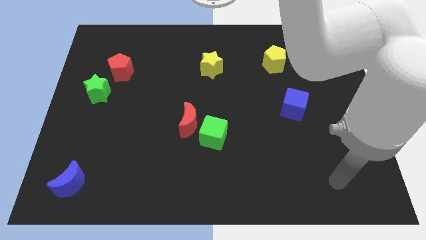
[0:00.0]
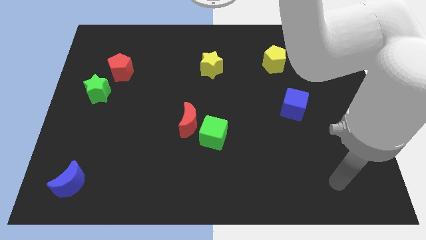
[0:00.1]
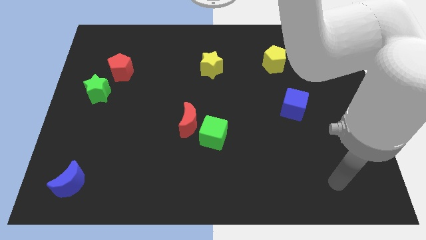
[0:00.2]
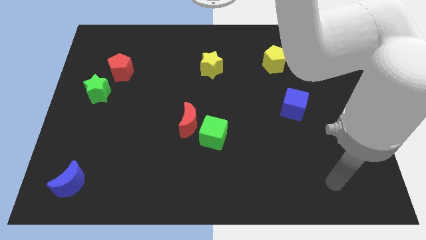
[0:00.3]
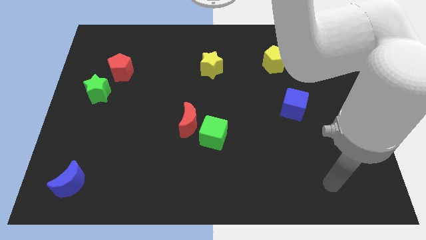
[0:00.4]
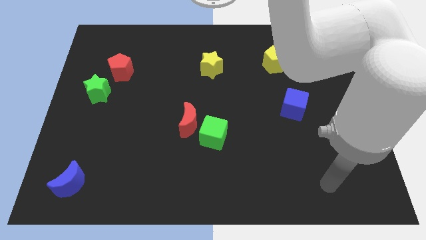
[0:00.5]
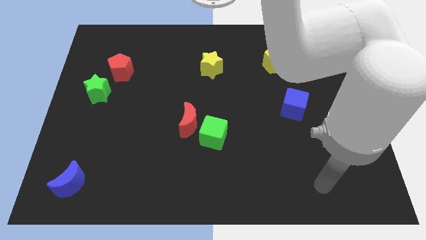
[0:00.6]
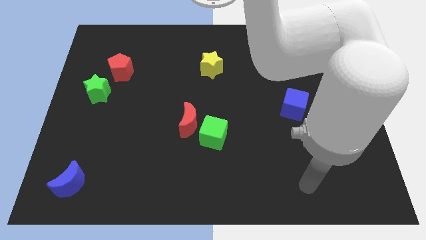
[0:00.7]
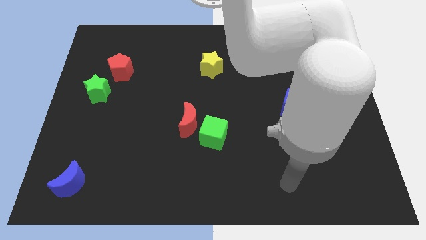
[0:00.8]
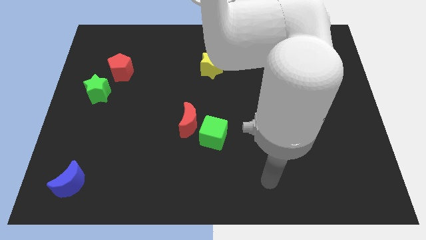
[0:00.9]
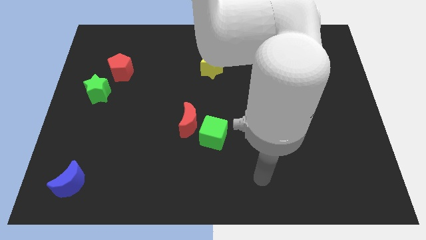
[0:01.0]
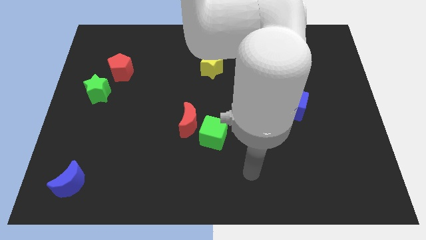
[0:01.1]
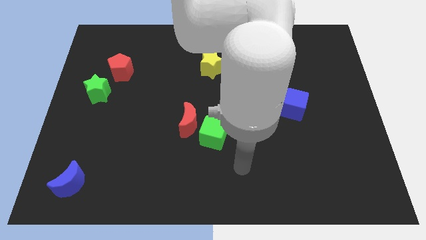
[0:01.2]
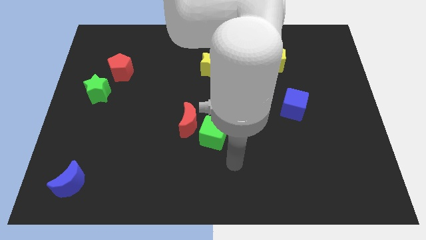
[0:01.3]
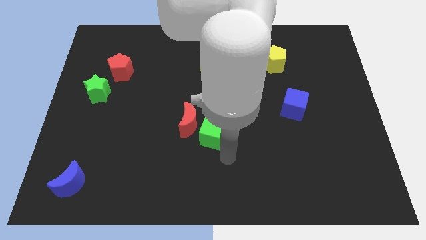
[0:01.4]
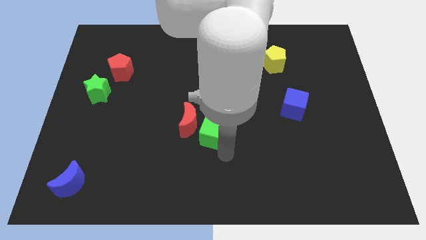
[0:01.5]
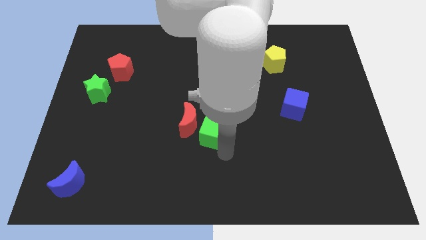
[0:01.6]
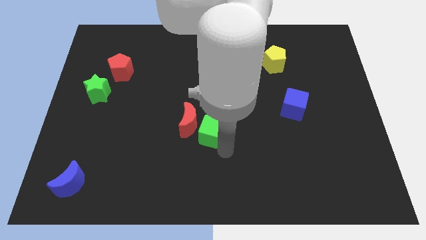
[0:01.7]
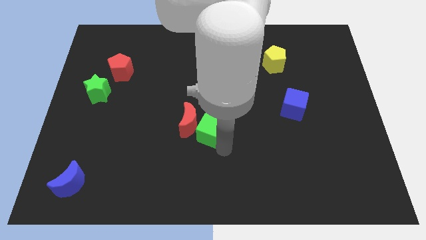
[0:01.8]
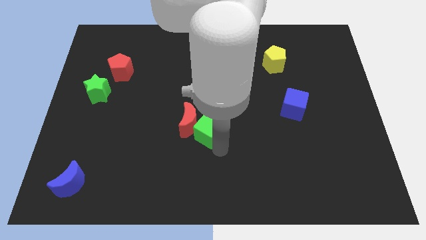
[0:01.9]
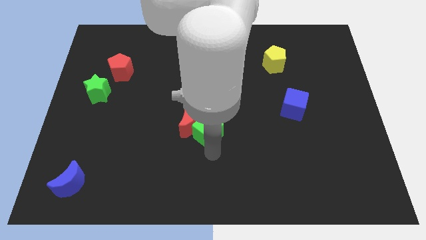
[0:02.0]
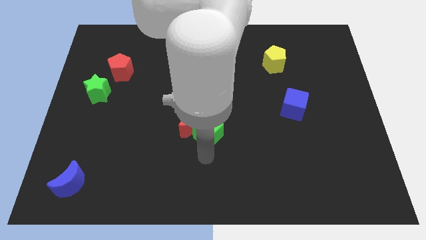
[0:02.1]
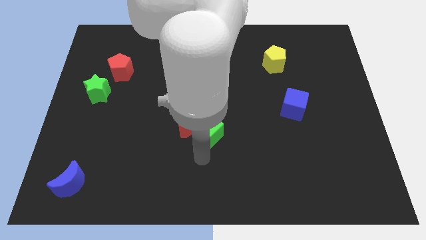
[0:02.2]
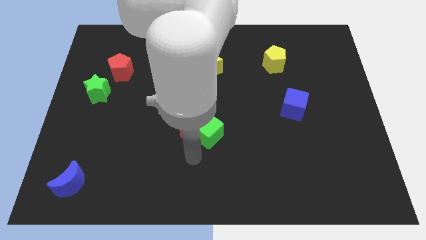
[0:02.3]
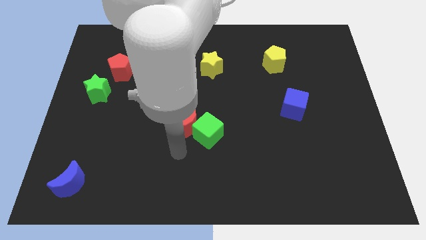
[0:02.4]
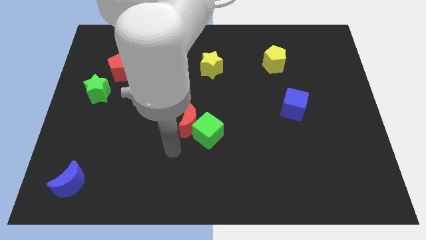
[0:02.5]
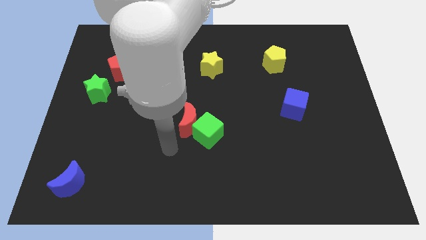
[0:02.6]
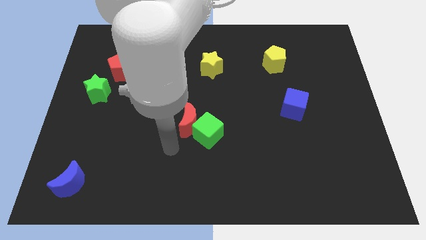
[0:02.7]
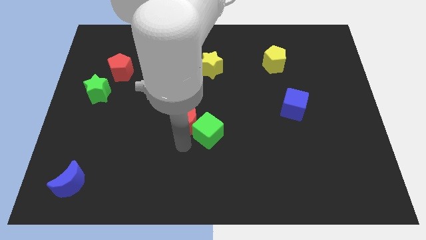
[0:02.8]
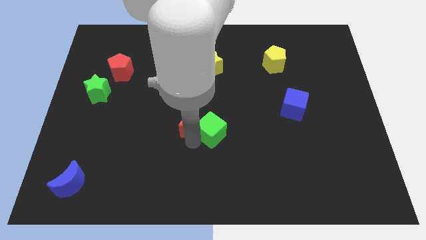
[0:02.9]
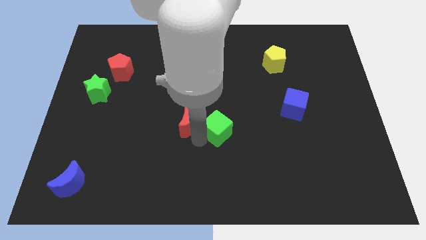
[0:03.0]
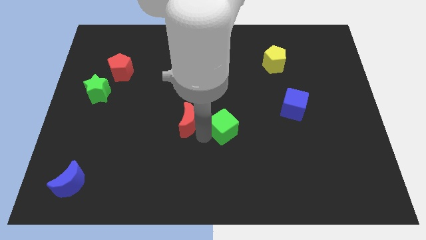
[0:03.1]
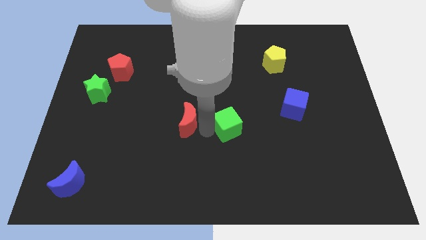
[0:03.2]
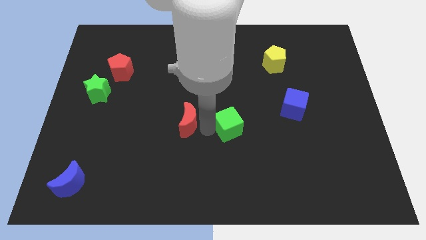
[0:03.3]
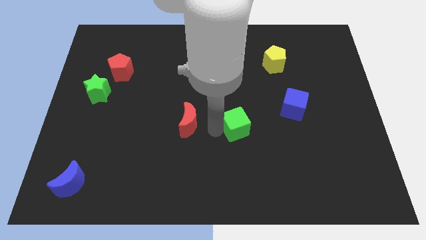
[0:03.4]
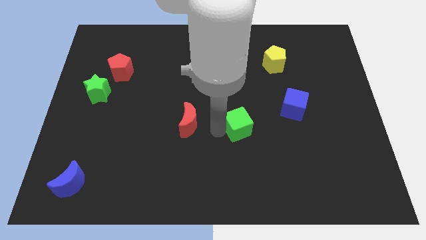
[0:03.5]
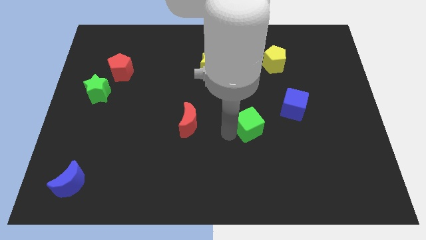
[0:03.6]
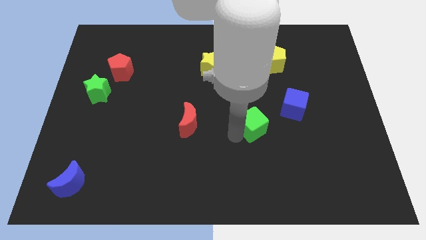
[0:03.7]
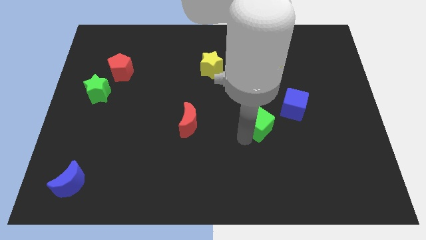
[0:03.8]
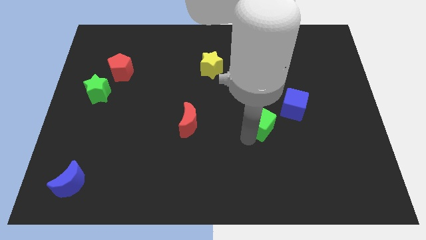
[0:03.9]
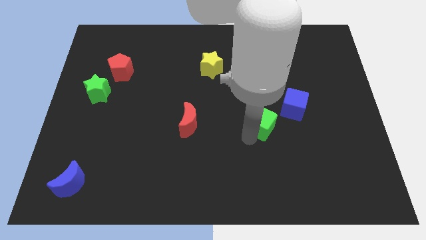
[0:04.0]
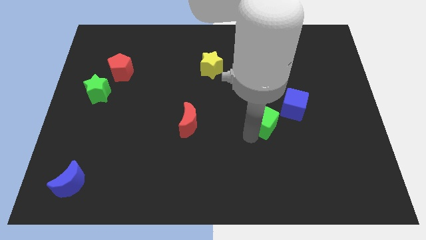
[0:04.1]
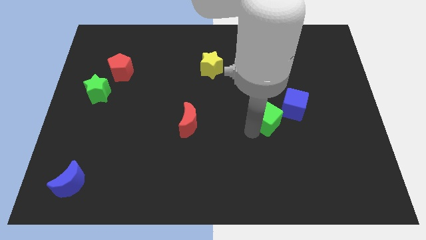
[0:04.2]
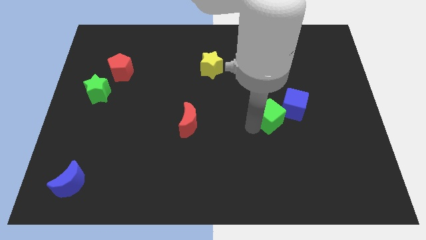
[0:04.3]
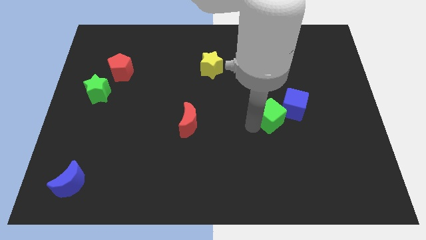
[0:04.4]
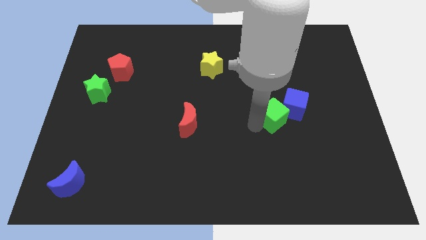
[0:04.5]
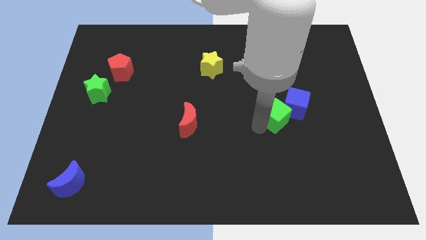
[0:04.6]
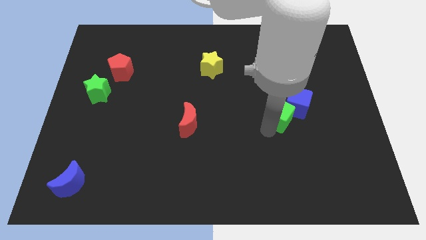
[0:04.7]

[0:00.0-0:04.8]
move green cube into the blue cube

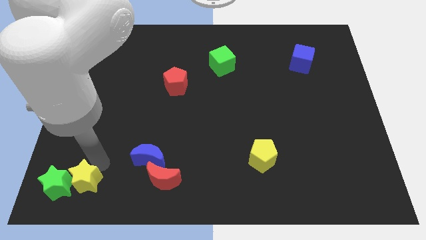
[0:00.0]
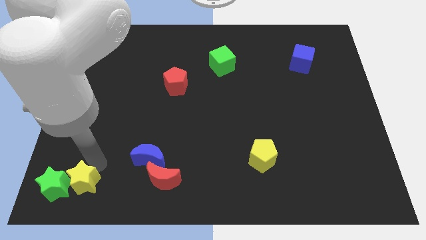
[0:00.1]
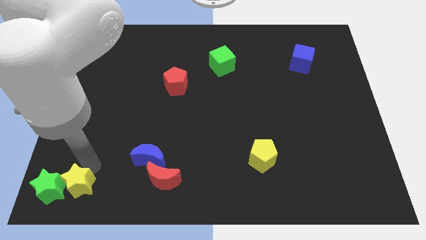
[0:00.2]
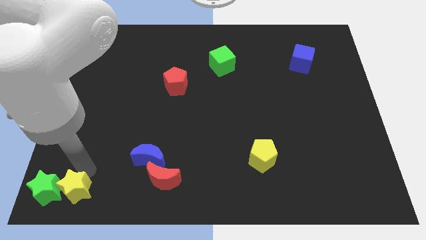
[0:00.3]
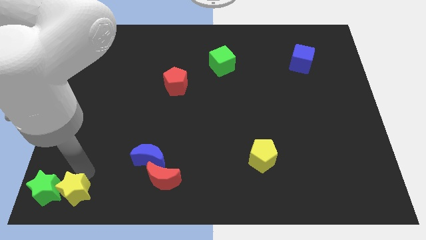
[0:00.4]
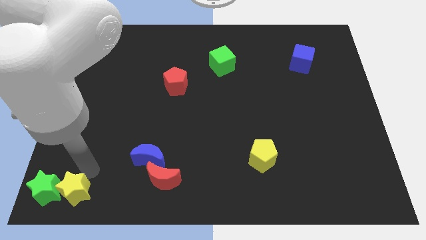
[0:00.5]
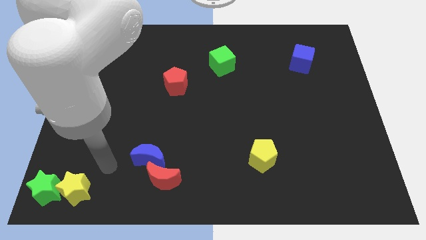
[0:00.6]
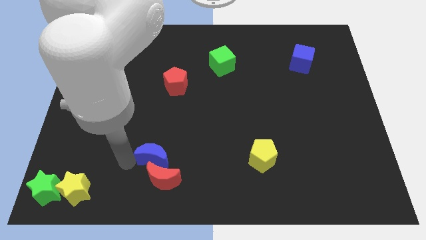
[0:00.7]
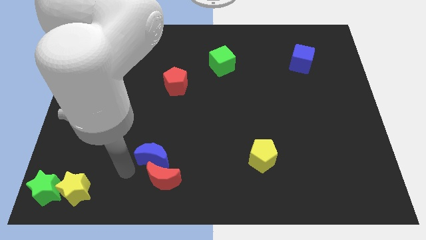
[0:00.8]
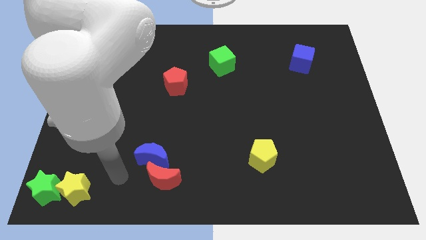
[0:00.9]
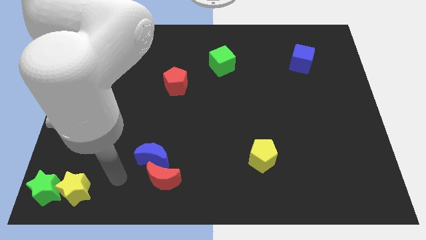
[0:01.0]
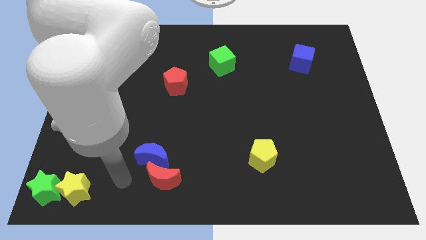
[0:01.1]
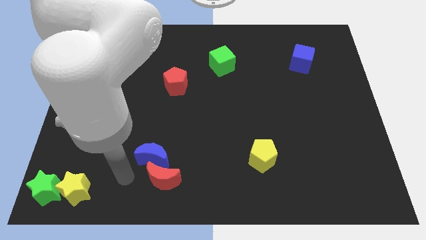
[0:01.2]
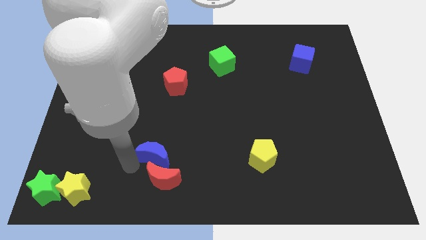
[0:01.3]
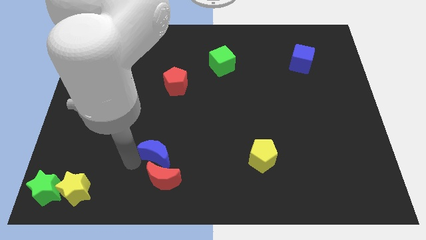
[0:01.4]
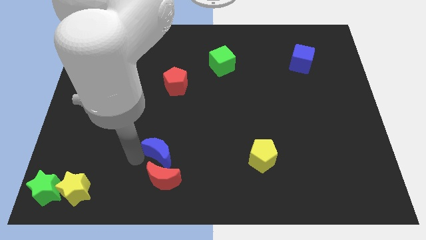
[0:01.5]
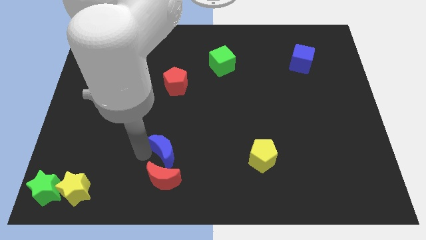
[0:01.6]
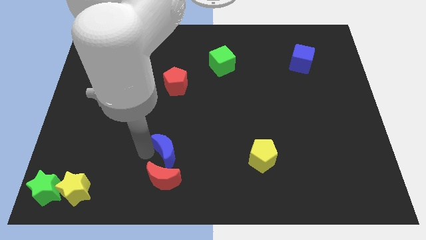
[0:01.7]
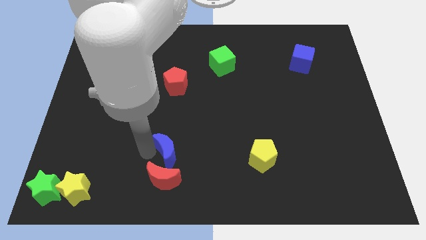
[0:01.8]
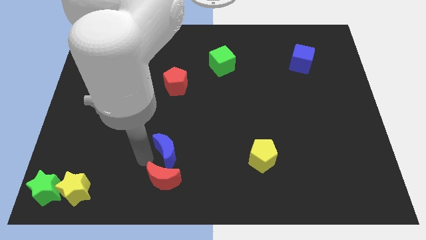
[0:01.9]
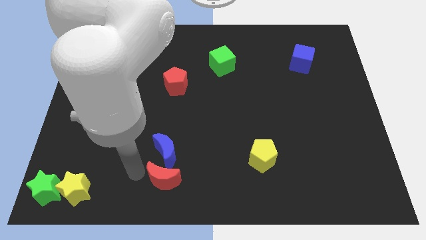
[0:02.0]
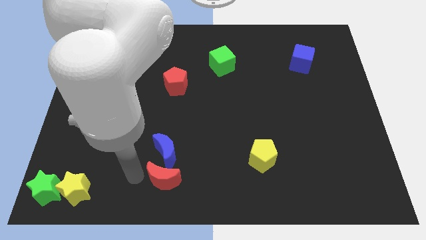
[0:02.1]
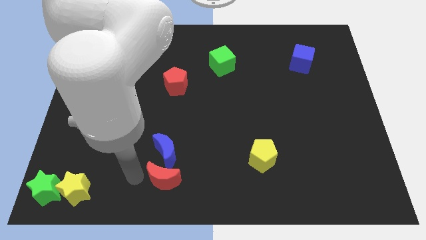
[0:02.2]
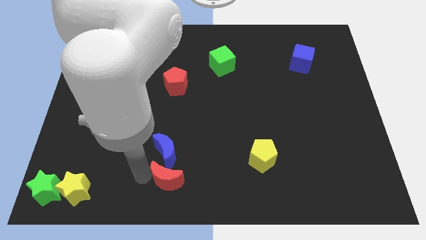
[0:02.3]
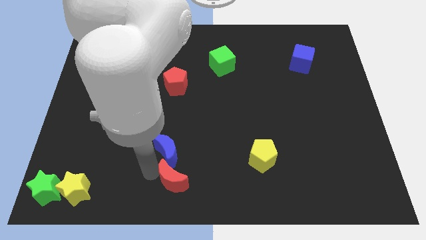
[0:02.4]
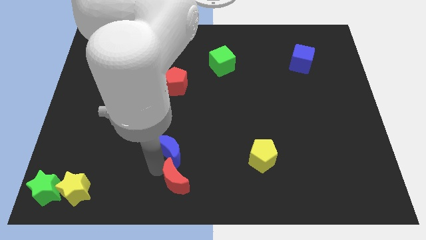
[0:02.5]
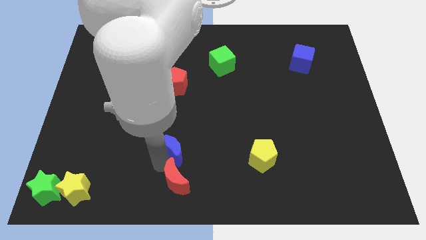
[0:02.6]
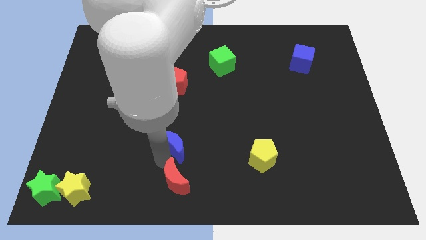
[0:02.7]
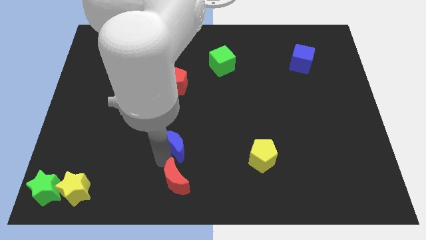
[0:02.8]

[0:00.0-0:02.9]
separate blue moon from red moon

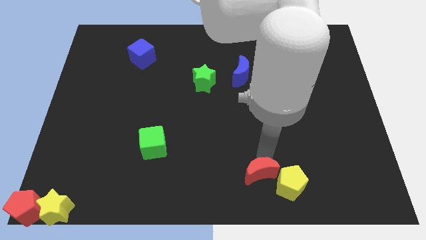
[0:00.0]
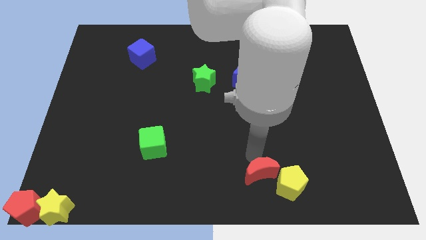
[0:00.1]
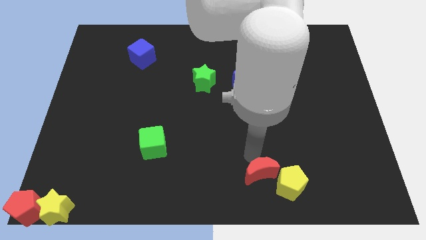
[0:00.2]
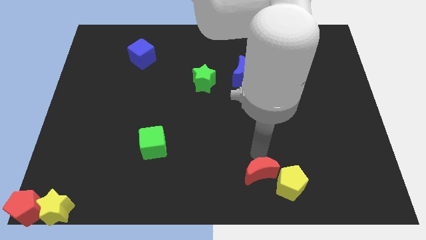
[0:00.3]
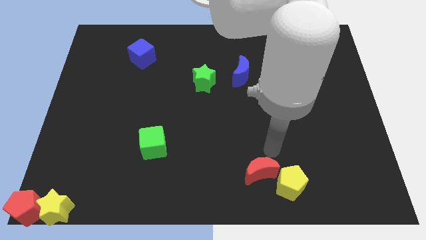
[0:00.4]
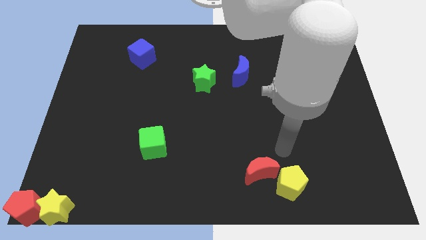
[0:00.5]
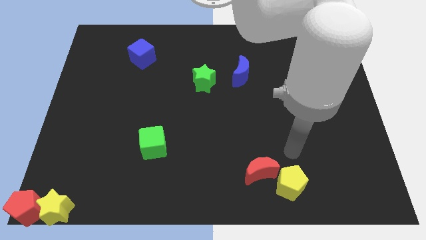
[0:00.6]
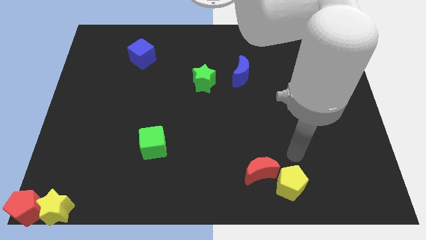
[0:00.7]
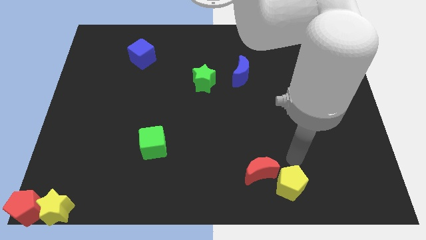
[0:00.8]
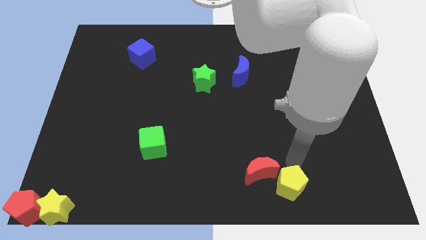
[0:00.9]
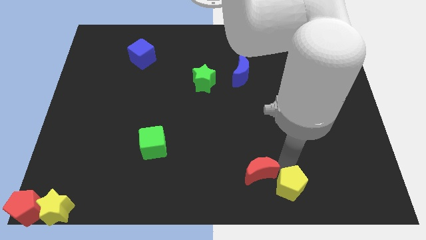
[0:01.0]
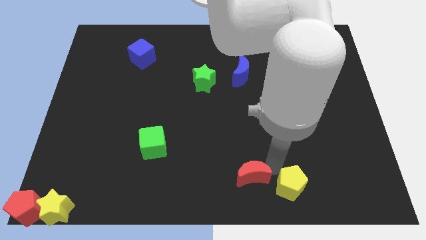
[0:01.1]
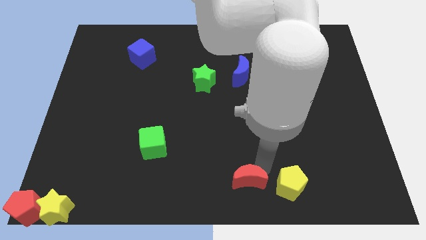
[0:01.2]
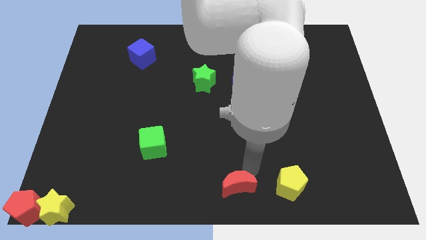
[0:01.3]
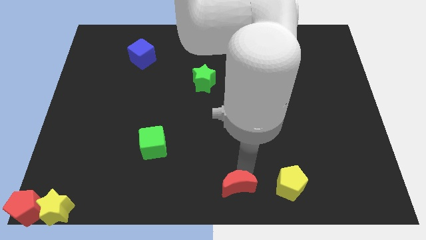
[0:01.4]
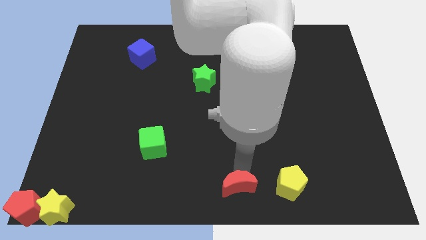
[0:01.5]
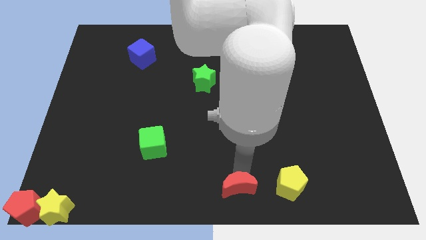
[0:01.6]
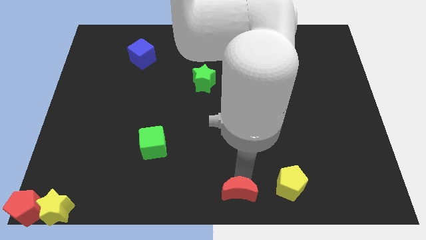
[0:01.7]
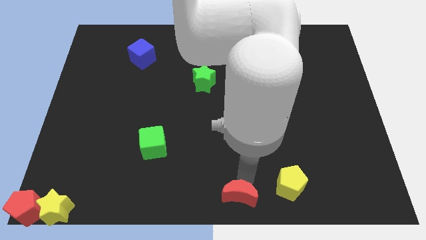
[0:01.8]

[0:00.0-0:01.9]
separate red crescent from yellow pentagon
